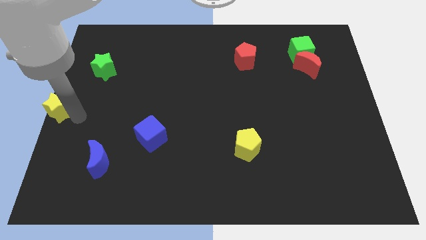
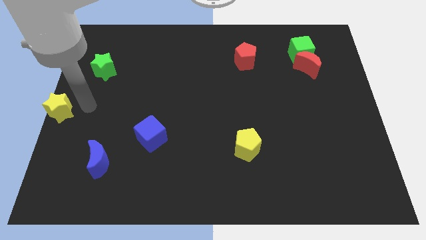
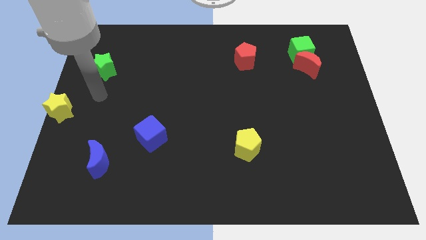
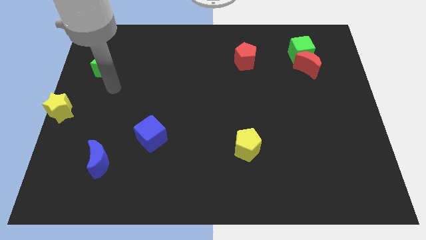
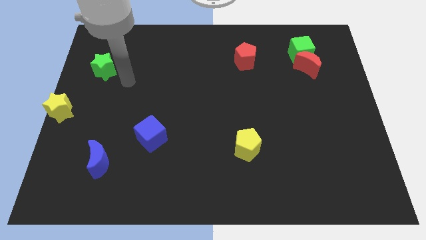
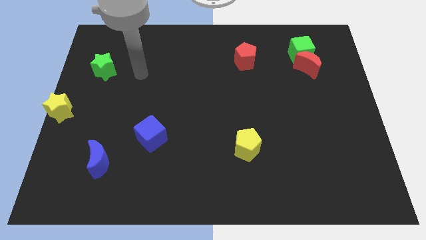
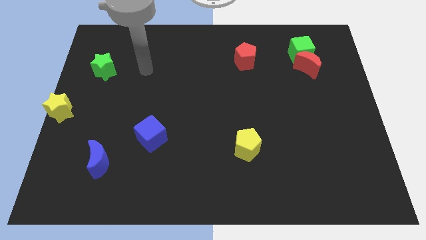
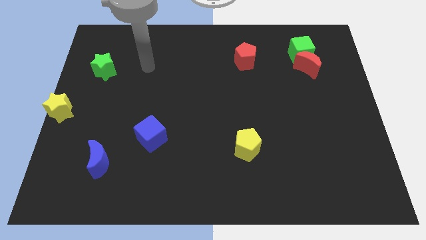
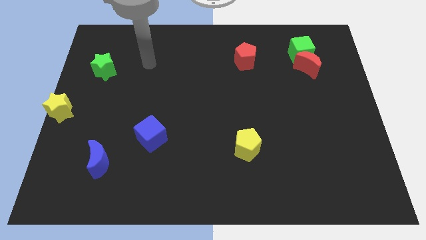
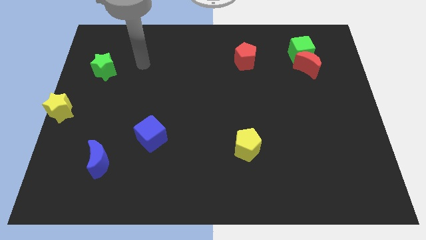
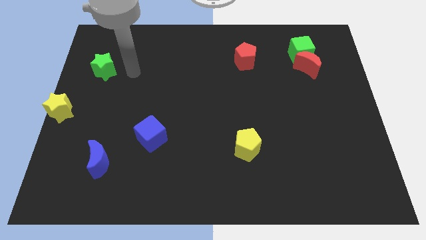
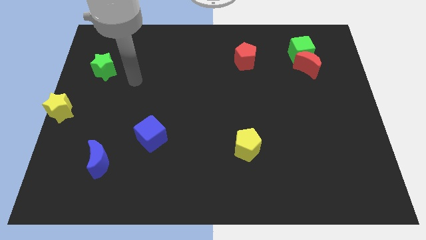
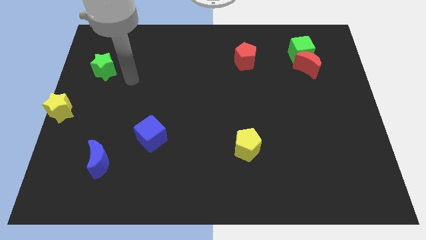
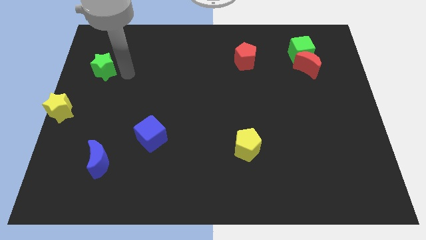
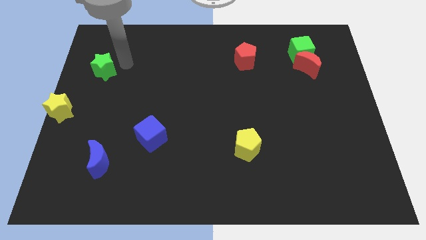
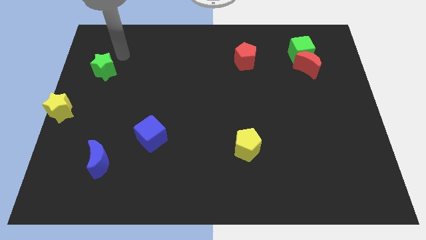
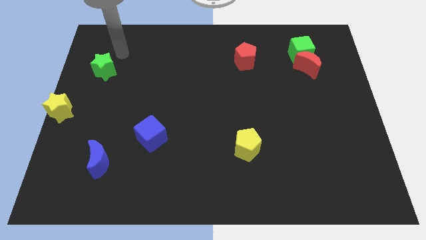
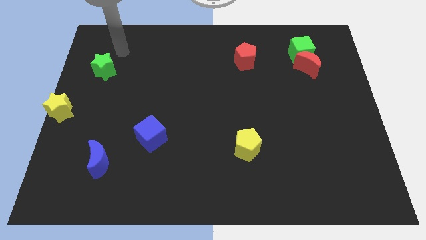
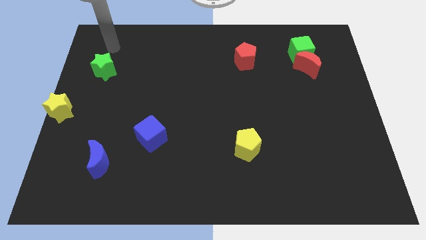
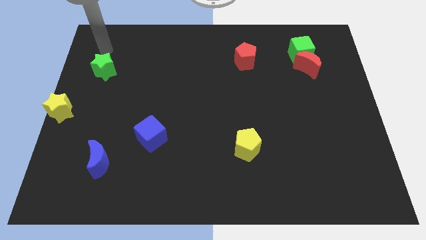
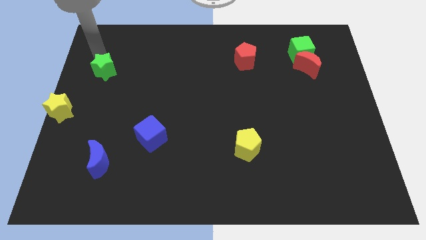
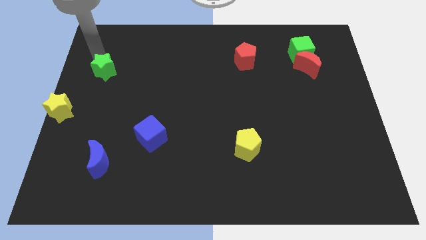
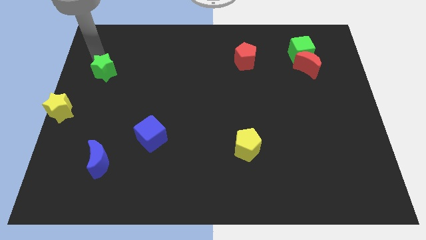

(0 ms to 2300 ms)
move the arm above the green star

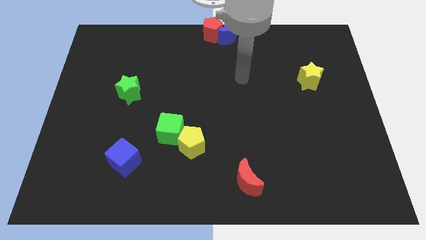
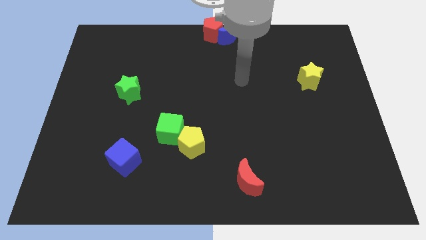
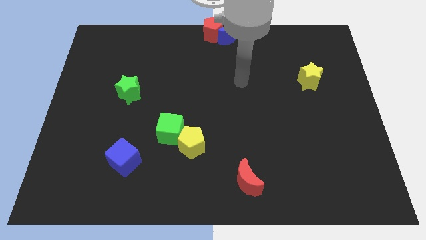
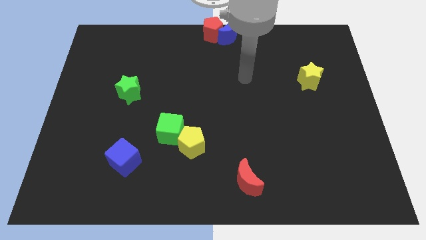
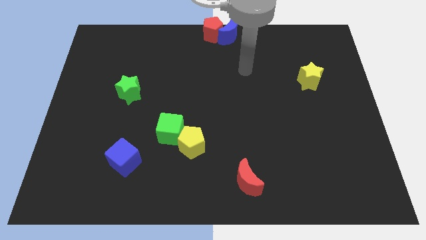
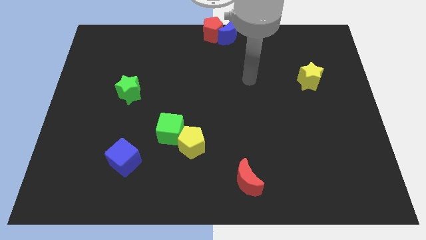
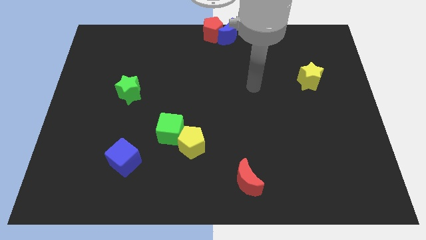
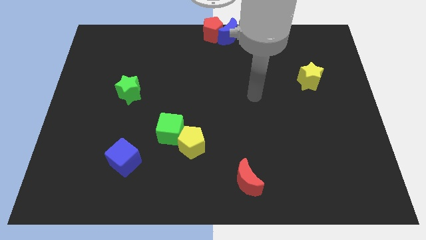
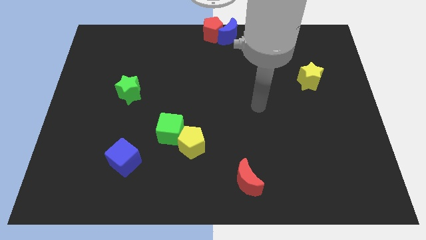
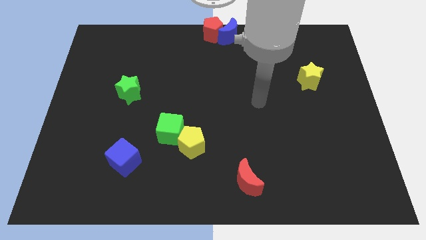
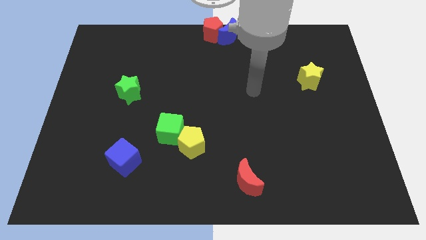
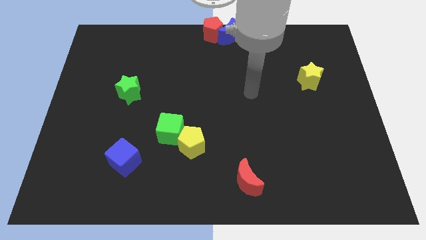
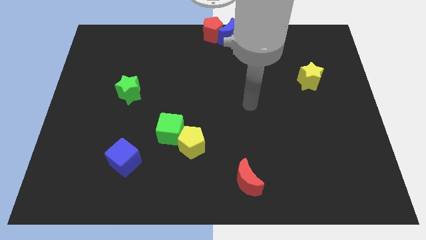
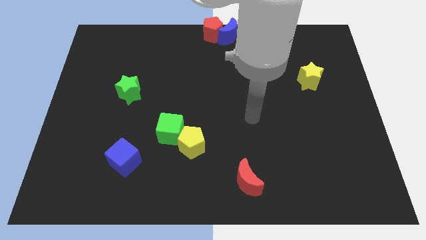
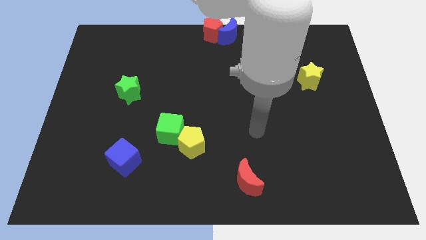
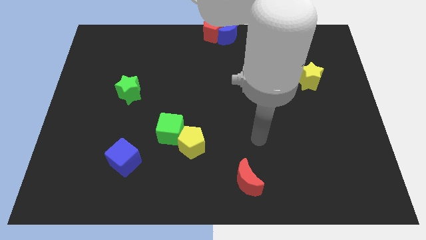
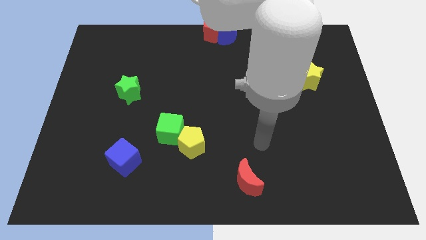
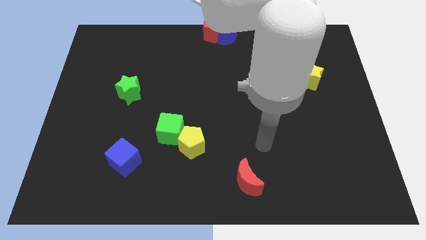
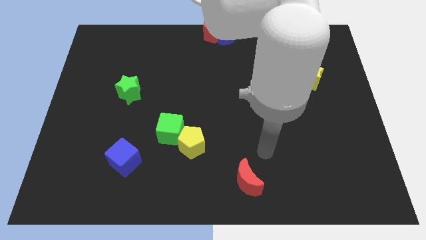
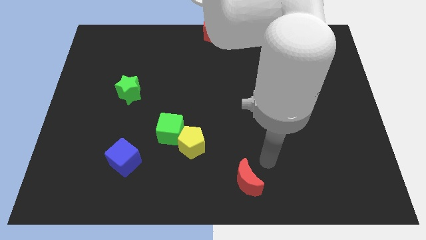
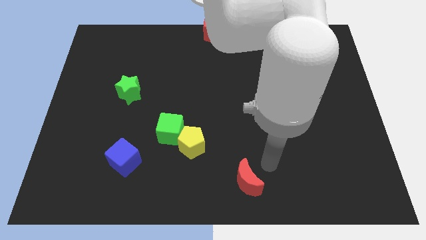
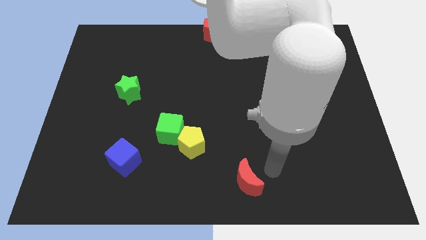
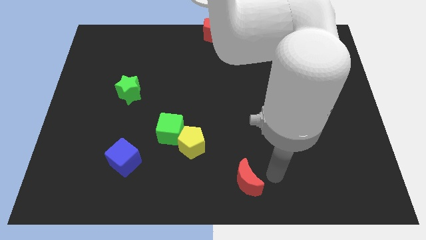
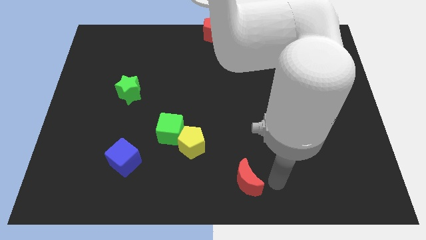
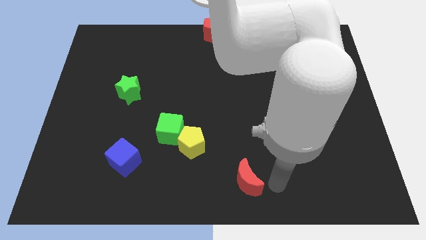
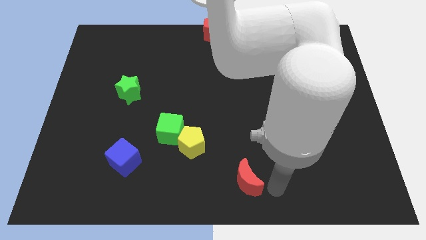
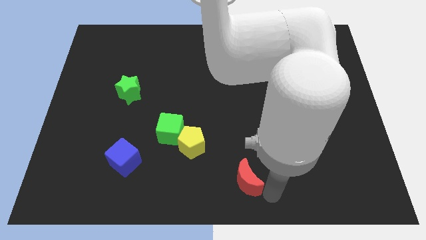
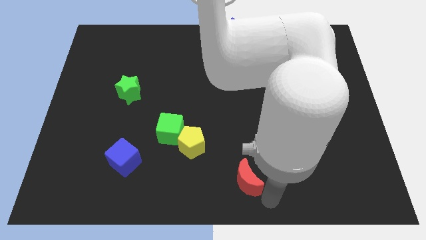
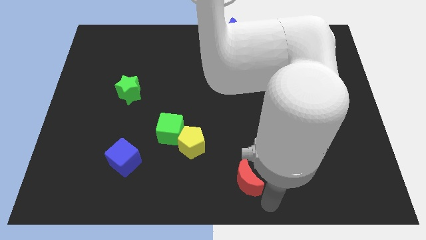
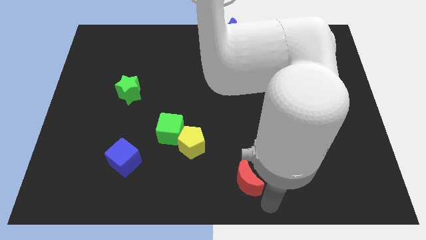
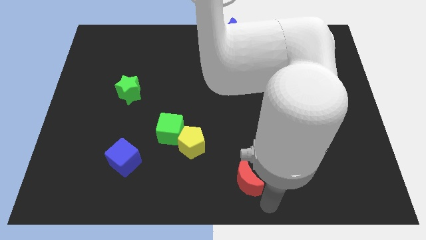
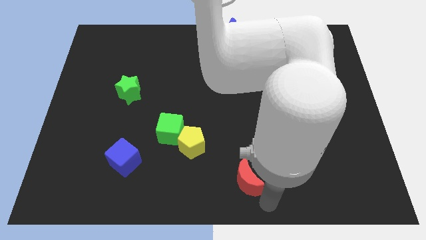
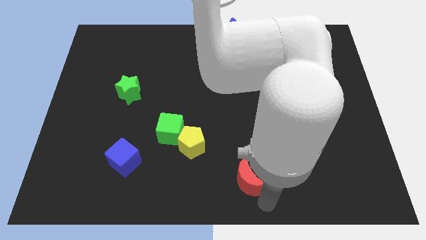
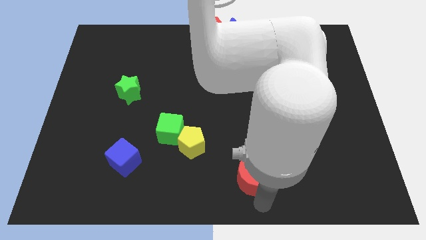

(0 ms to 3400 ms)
point your hand at the bottom side of the red crescent

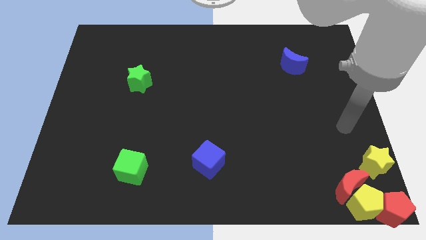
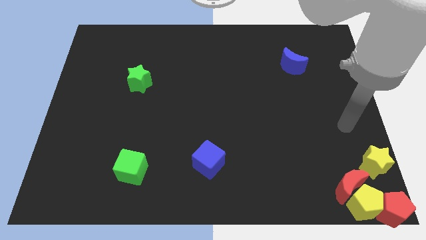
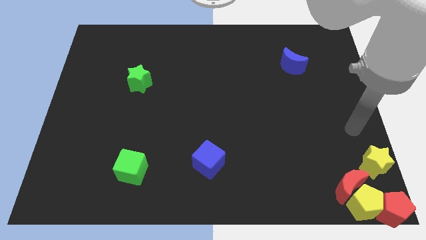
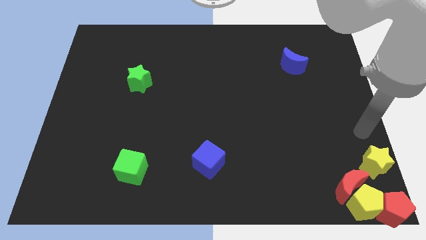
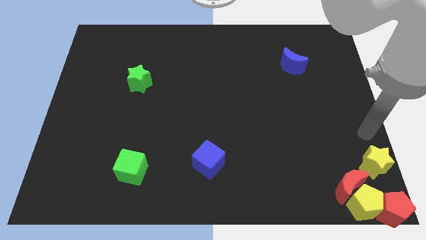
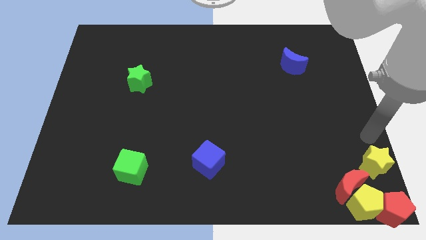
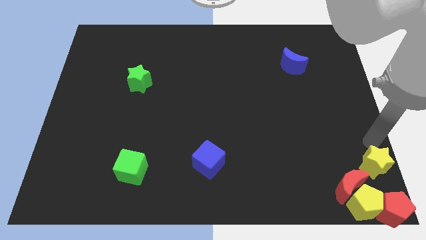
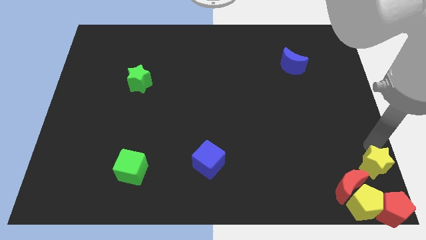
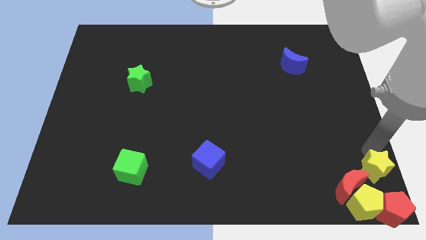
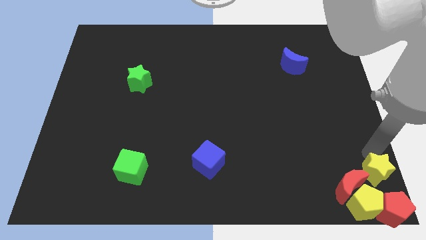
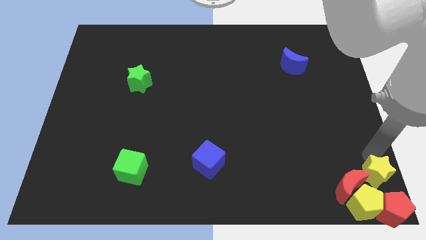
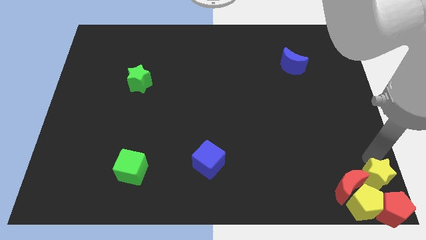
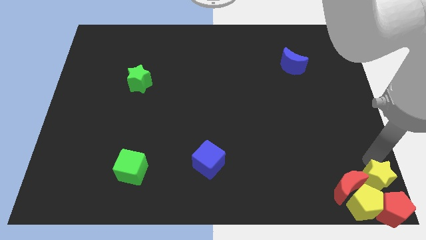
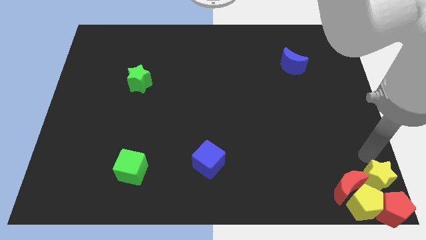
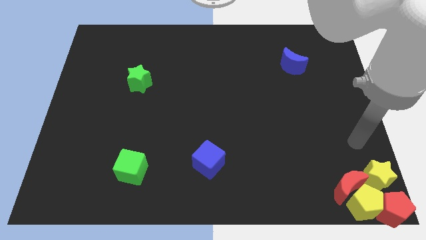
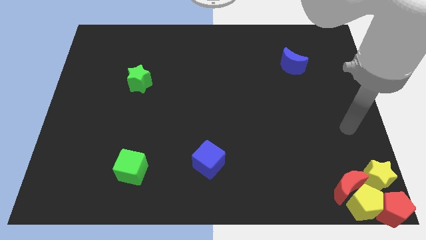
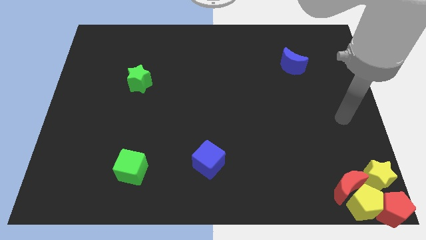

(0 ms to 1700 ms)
push yellow star into yellow pentagon

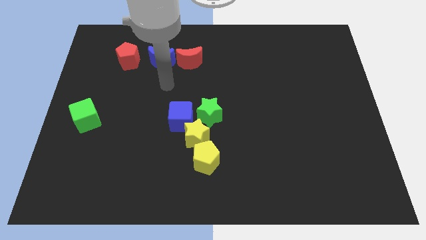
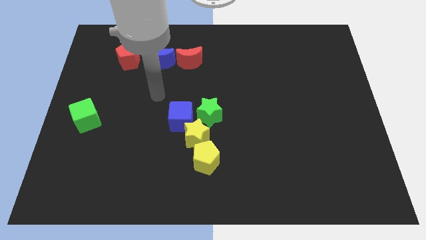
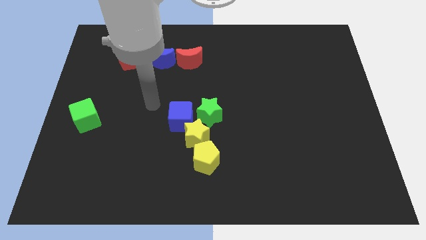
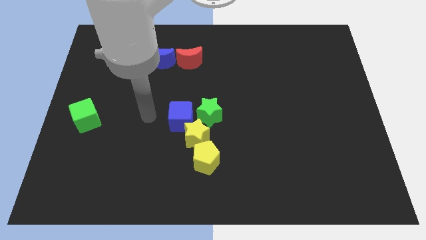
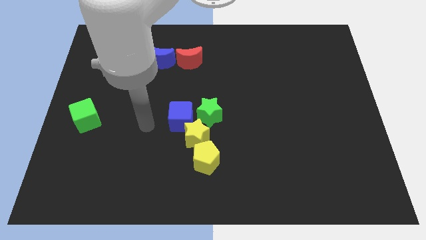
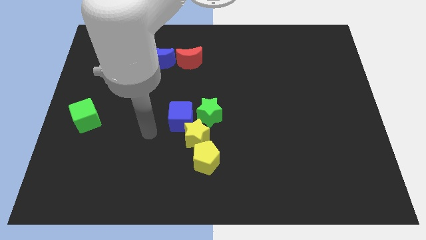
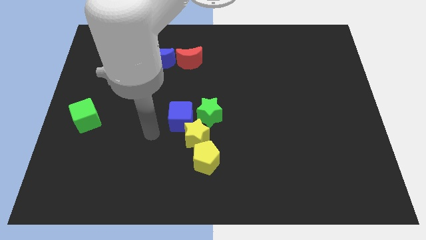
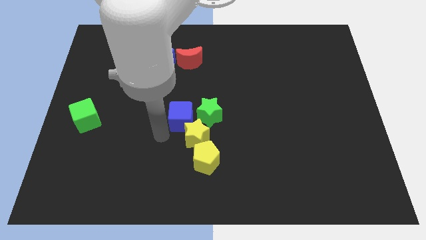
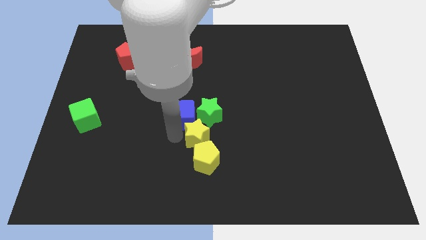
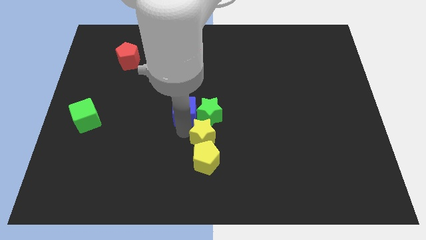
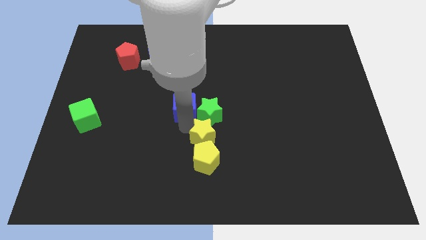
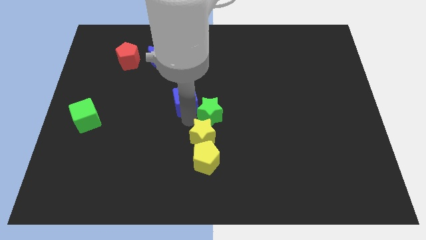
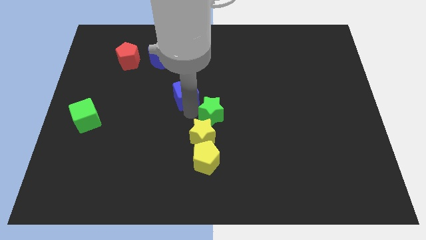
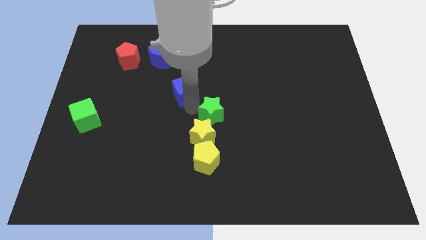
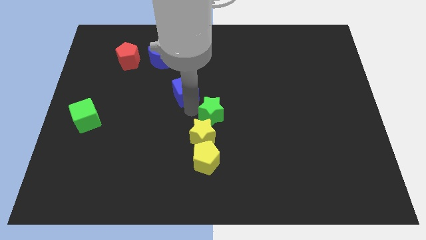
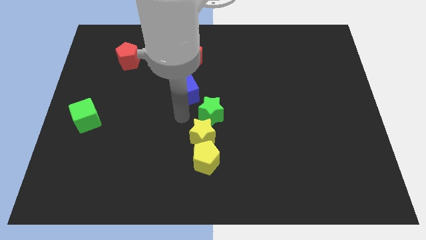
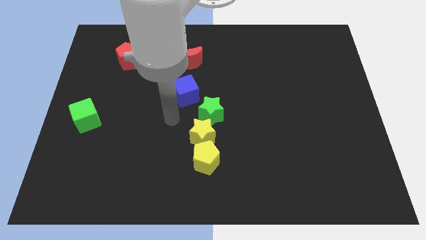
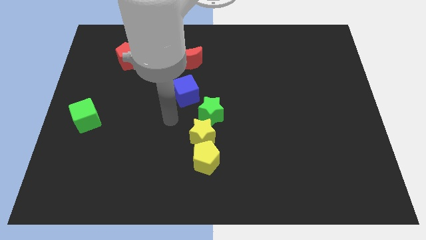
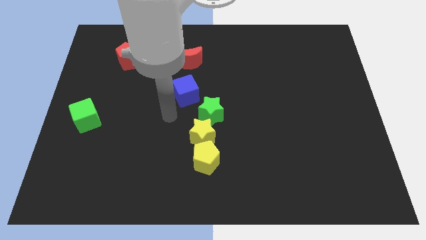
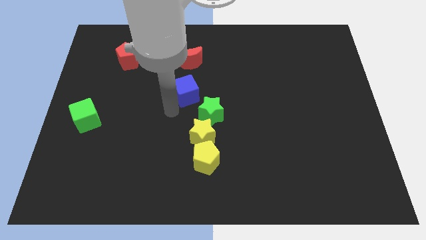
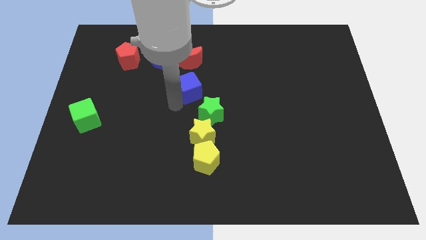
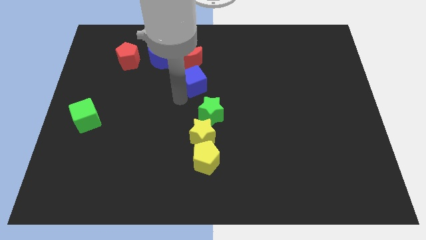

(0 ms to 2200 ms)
place the blue cube to the bottom side of the red crescent
